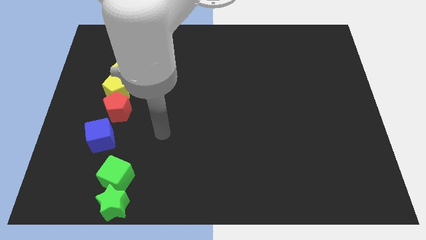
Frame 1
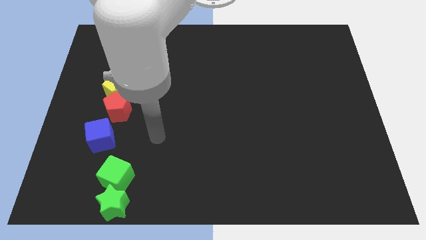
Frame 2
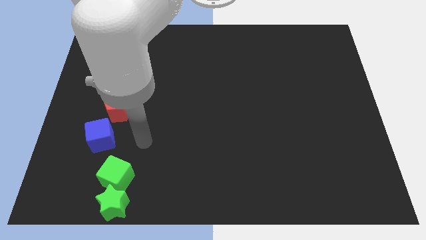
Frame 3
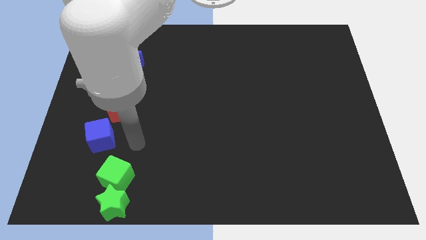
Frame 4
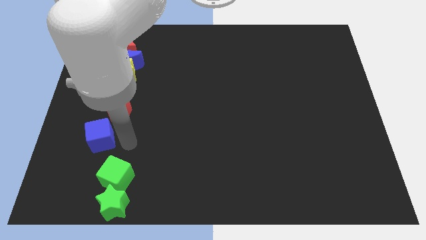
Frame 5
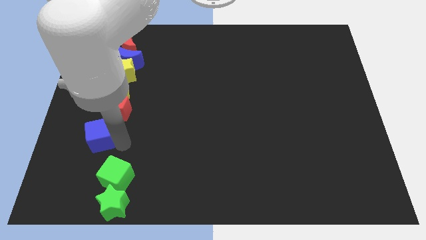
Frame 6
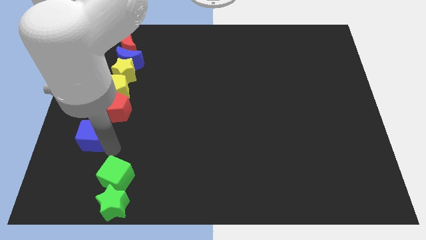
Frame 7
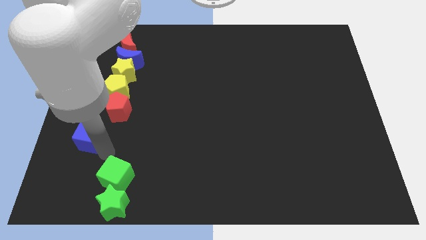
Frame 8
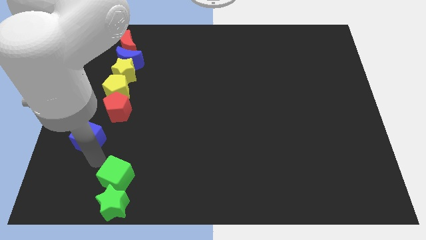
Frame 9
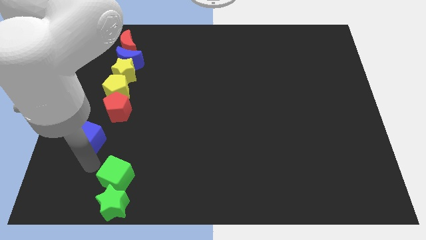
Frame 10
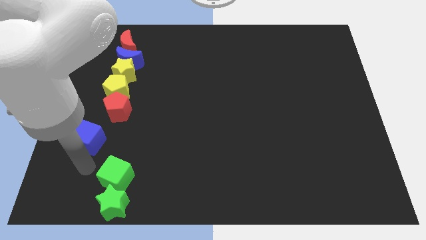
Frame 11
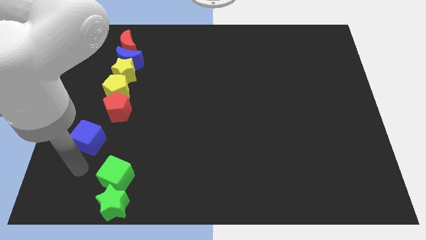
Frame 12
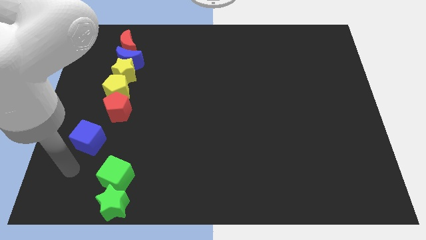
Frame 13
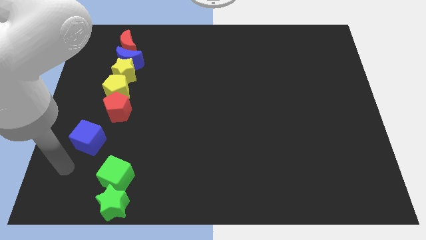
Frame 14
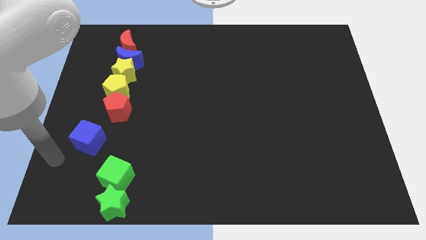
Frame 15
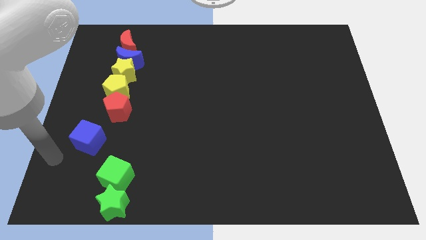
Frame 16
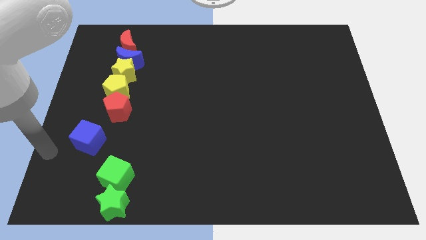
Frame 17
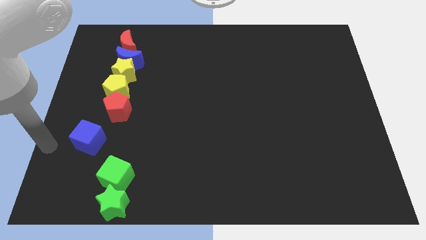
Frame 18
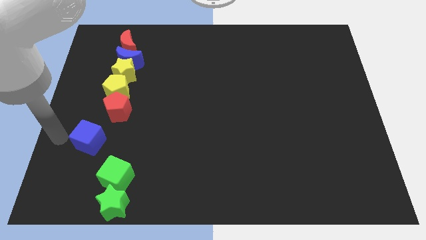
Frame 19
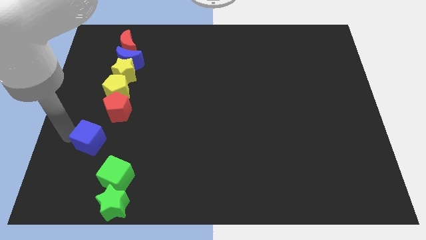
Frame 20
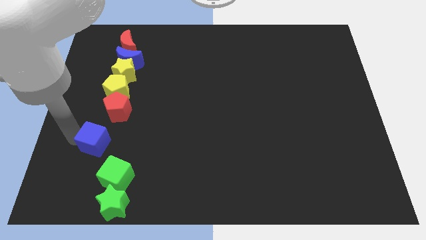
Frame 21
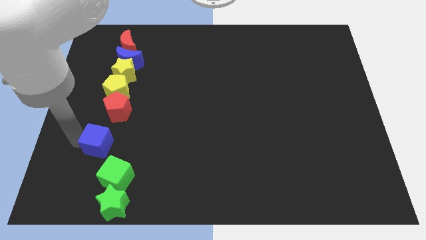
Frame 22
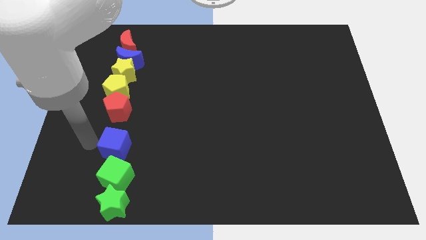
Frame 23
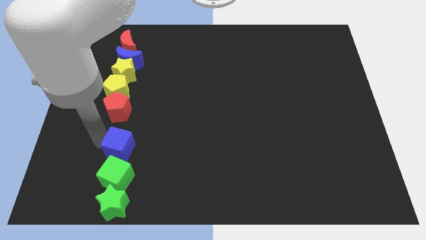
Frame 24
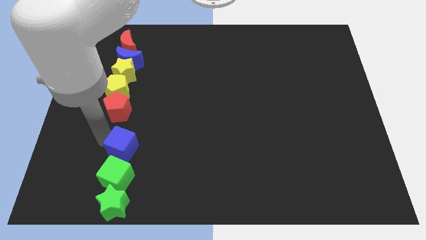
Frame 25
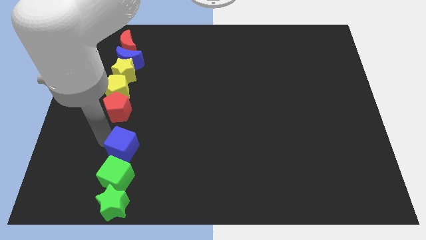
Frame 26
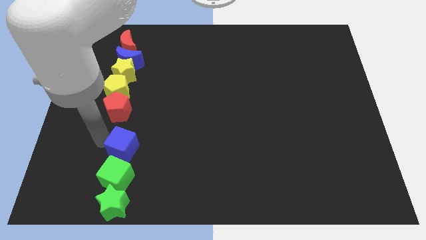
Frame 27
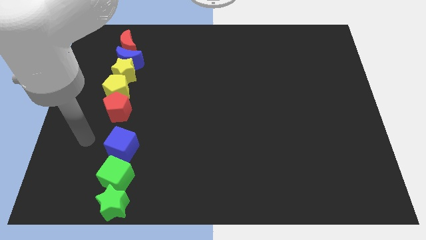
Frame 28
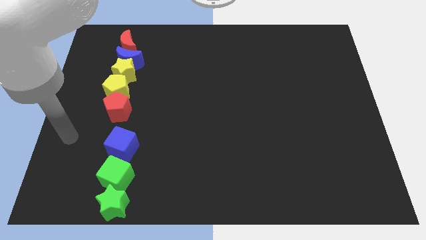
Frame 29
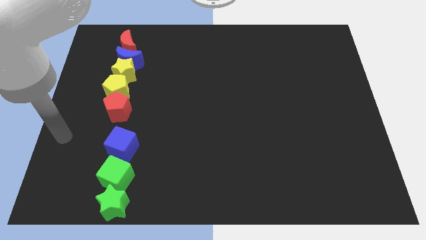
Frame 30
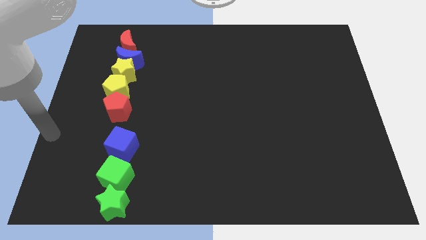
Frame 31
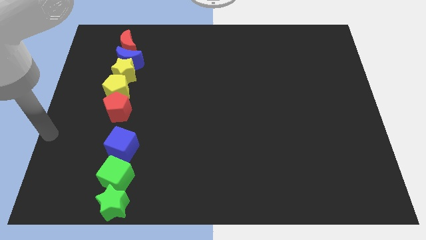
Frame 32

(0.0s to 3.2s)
push the blue block above the green block to from vertical line

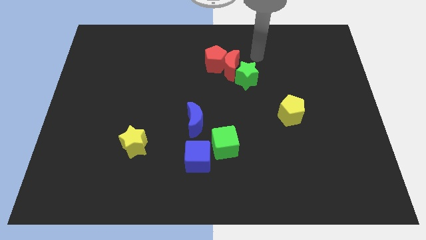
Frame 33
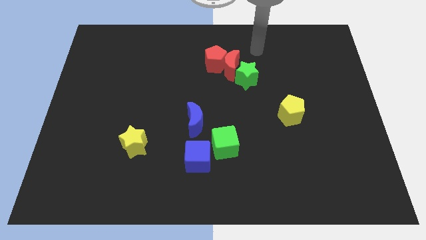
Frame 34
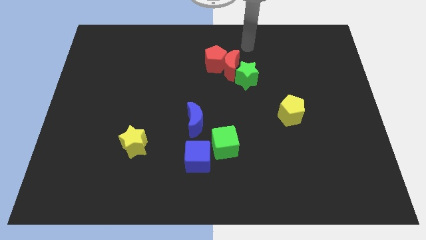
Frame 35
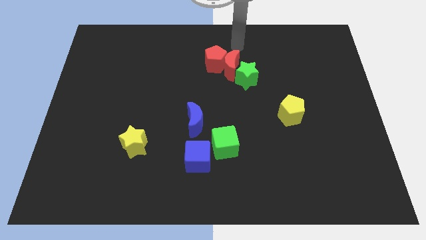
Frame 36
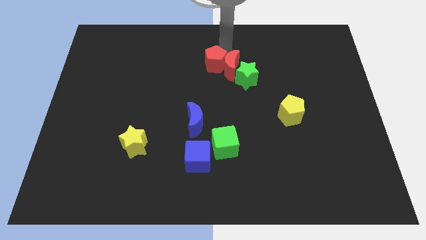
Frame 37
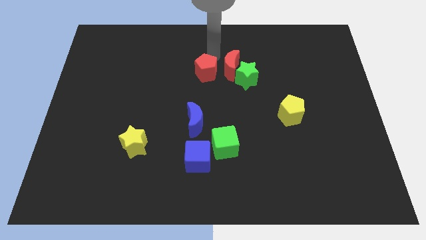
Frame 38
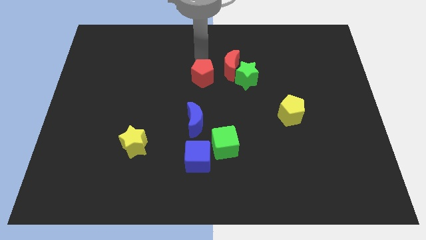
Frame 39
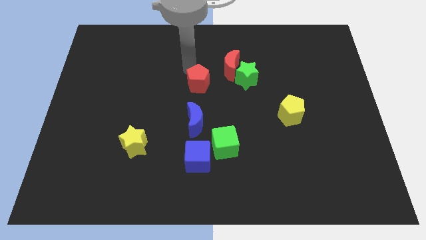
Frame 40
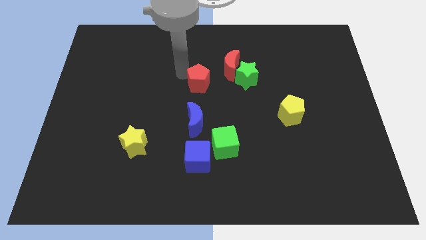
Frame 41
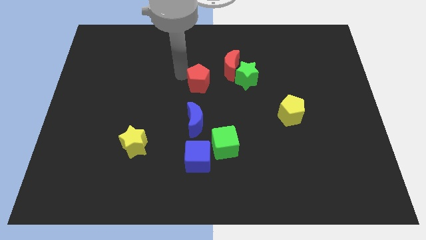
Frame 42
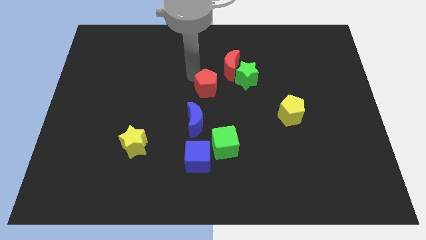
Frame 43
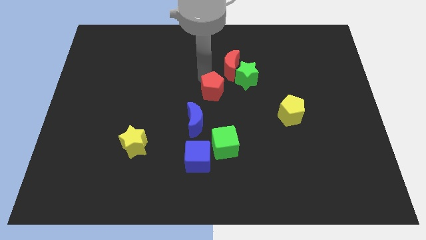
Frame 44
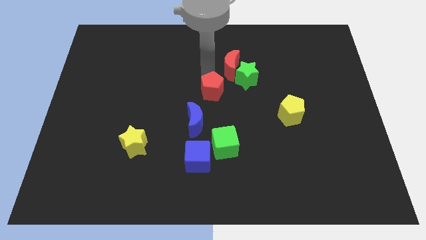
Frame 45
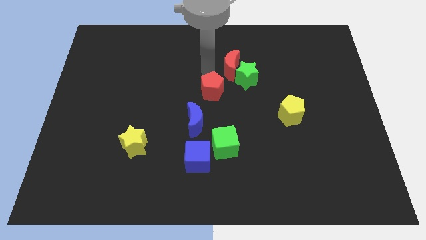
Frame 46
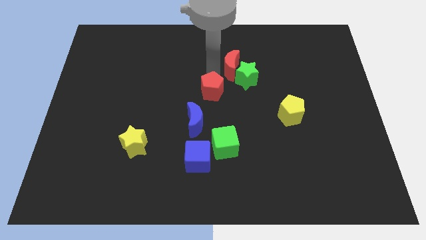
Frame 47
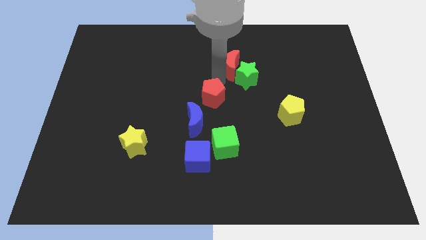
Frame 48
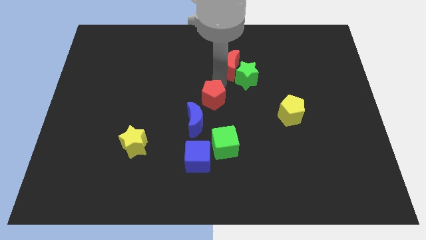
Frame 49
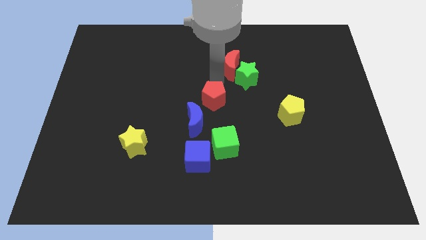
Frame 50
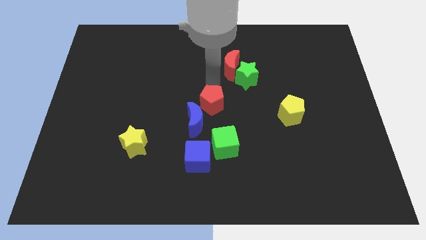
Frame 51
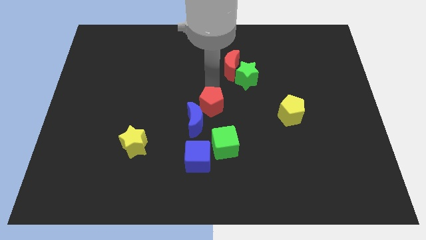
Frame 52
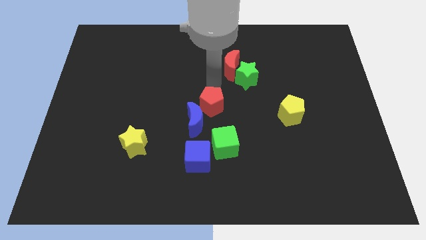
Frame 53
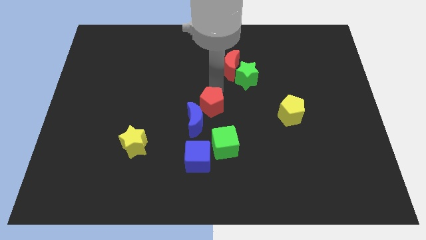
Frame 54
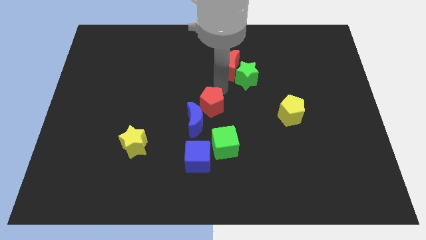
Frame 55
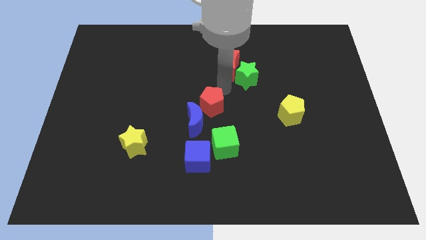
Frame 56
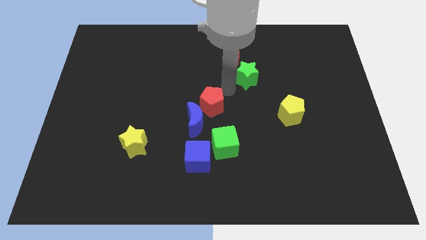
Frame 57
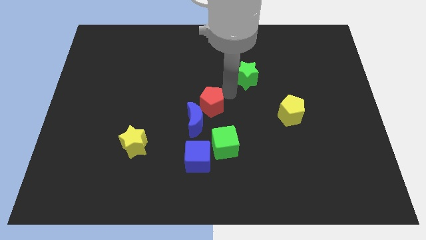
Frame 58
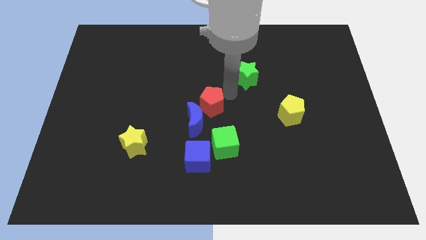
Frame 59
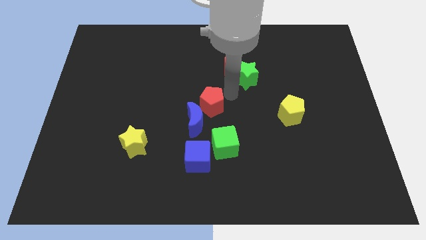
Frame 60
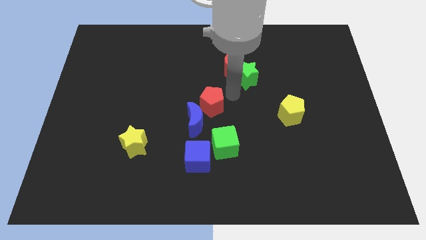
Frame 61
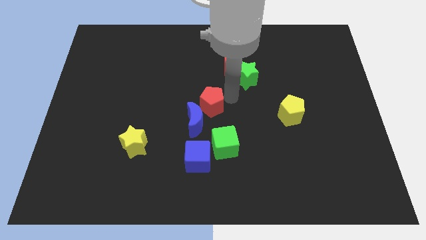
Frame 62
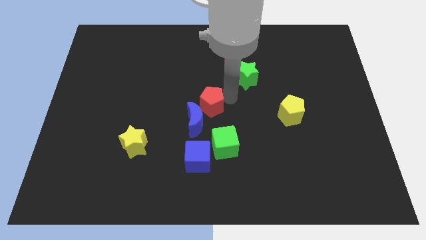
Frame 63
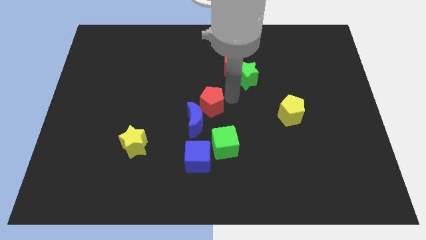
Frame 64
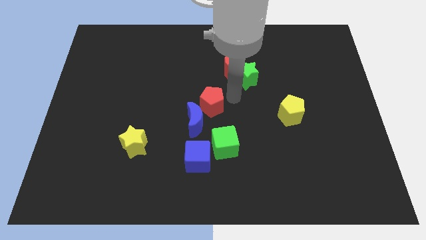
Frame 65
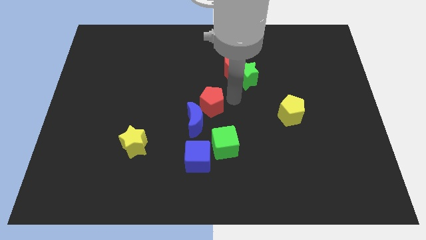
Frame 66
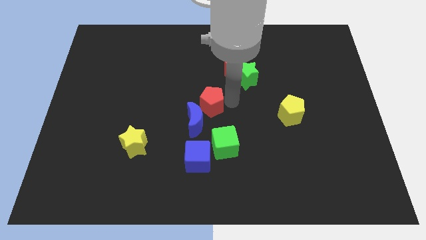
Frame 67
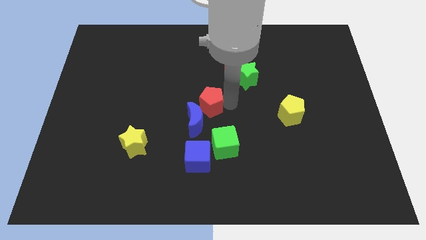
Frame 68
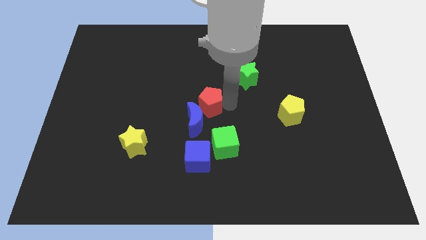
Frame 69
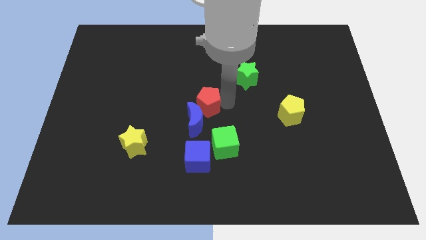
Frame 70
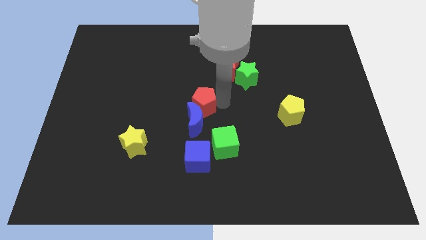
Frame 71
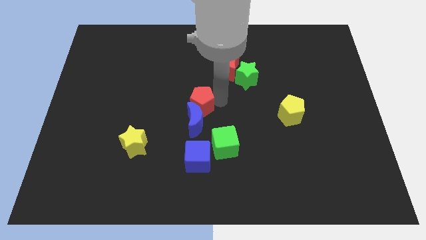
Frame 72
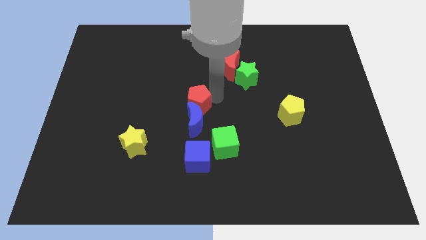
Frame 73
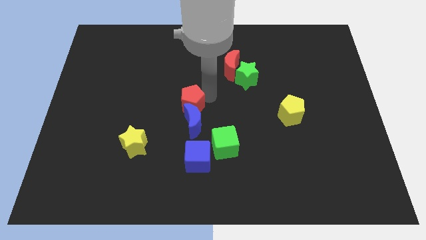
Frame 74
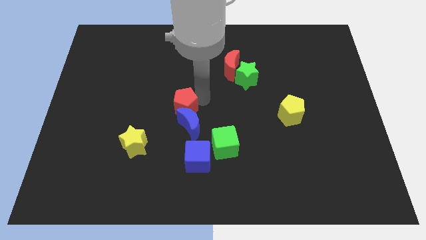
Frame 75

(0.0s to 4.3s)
push the red pentagon into the top side of the blue crescent

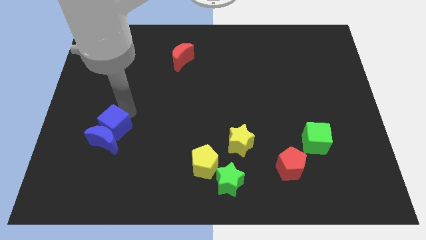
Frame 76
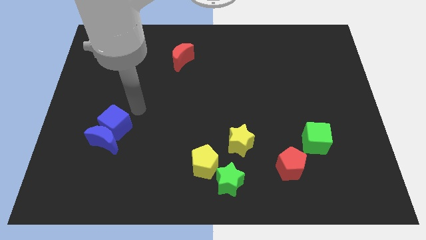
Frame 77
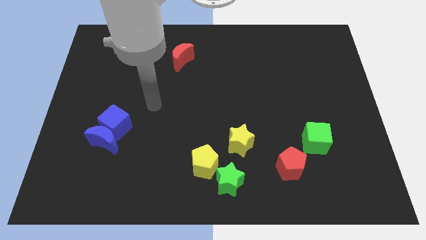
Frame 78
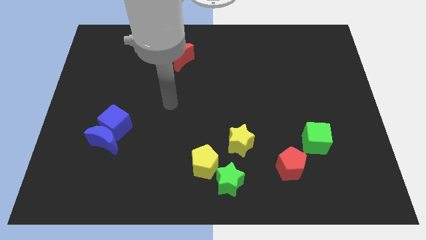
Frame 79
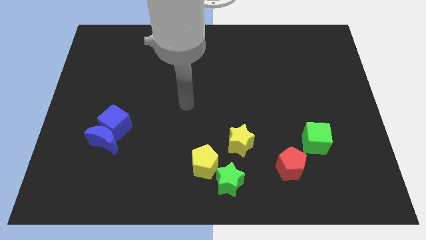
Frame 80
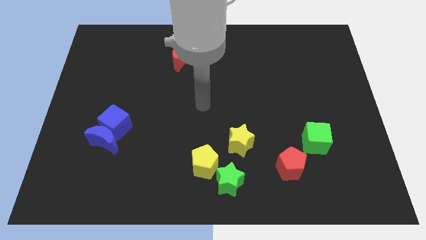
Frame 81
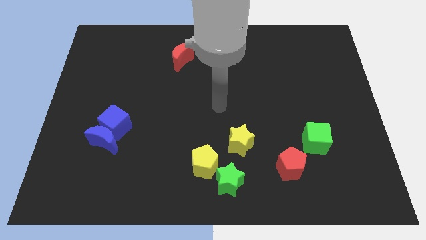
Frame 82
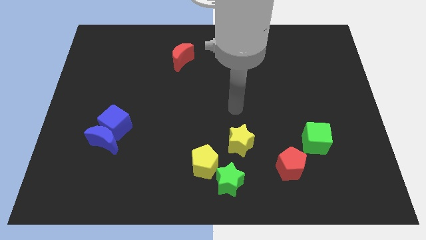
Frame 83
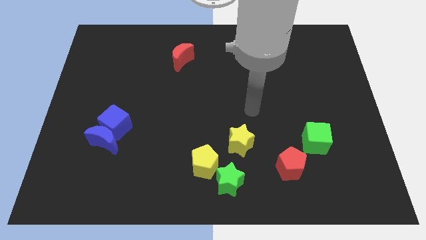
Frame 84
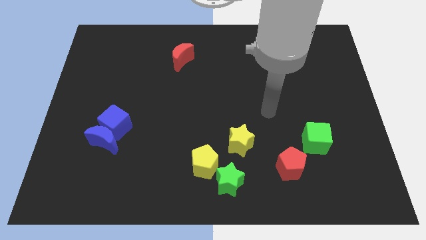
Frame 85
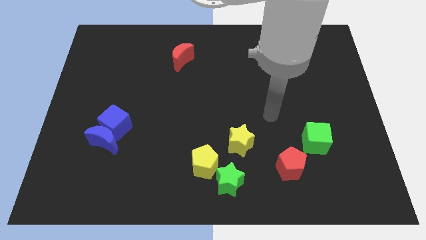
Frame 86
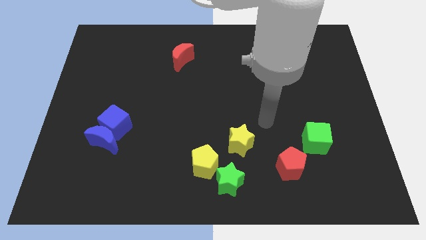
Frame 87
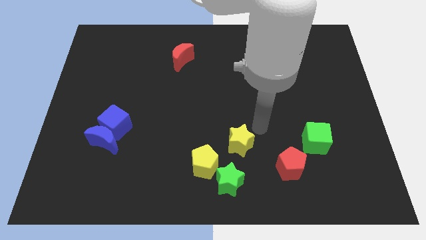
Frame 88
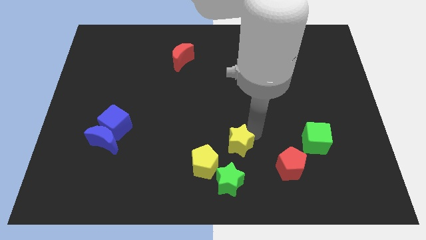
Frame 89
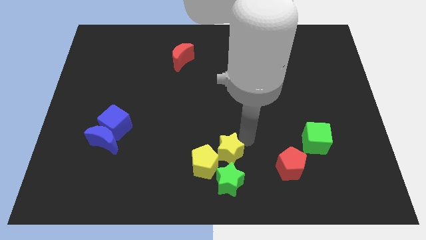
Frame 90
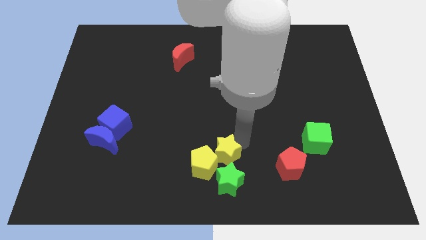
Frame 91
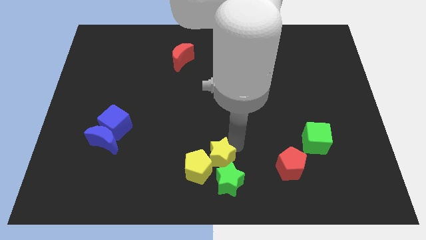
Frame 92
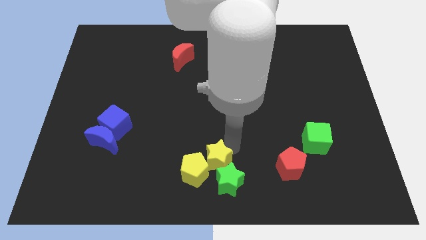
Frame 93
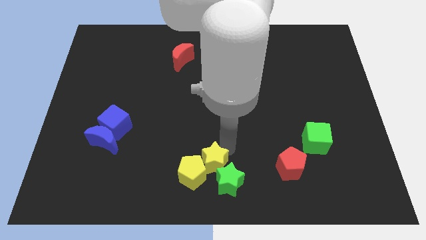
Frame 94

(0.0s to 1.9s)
move the yellow star into the yellow pentagon
